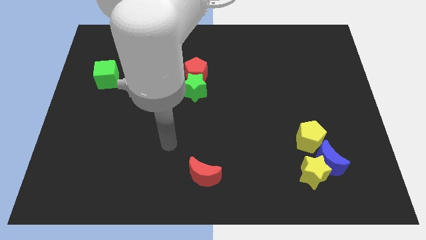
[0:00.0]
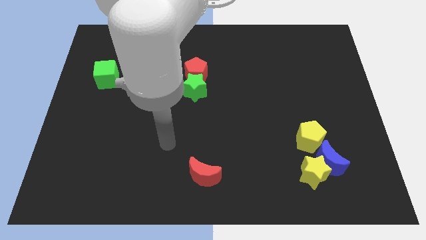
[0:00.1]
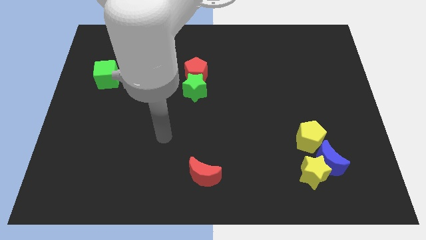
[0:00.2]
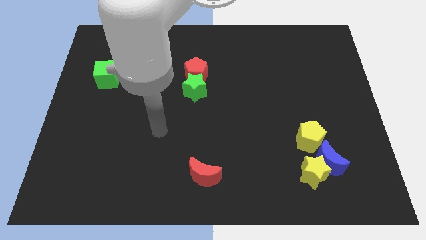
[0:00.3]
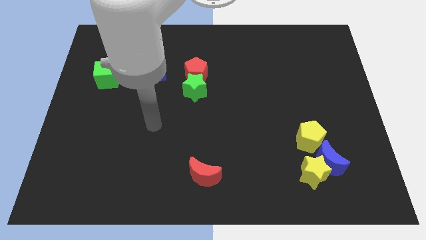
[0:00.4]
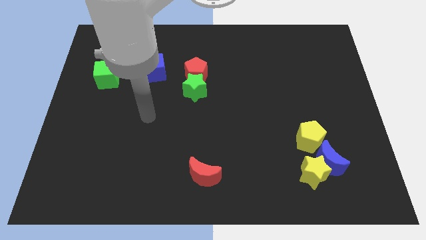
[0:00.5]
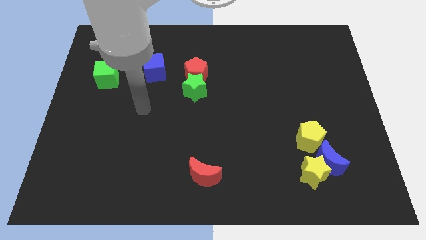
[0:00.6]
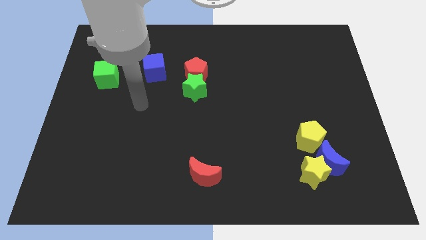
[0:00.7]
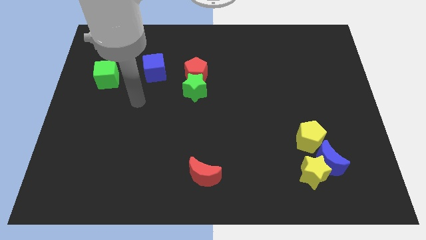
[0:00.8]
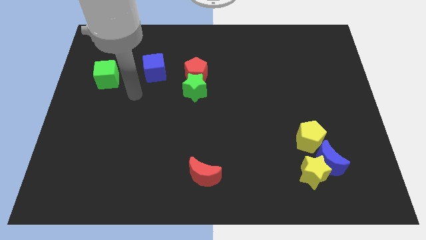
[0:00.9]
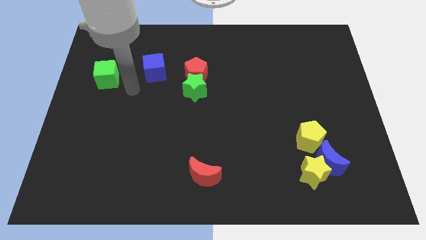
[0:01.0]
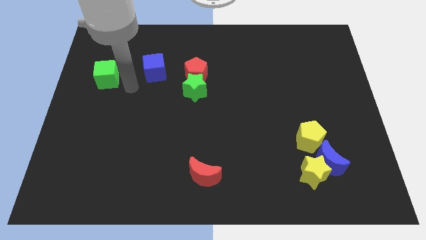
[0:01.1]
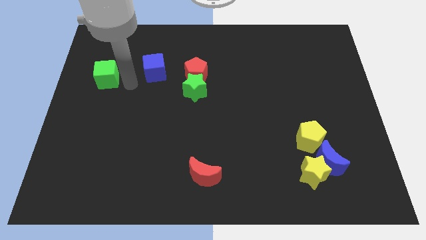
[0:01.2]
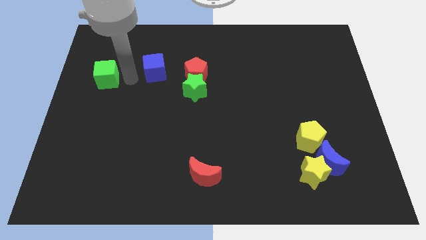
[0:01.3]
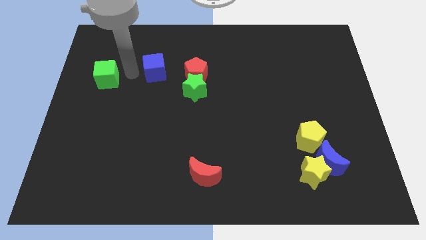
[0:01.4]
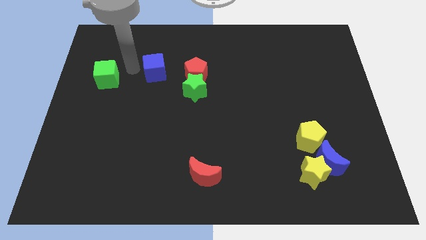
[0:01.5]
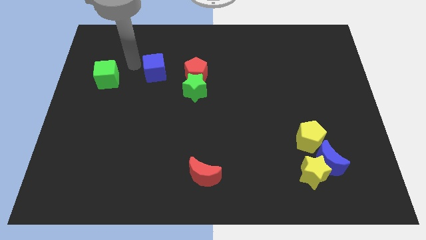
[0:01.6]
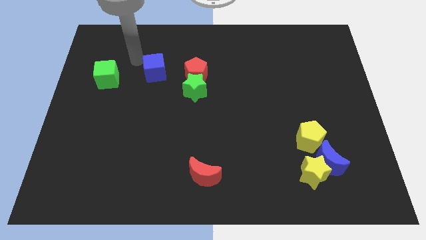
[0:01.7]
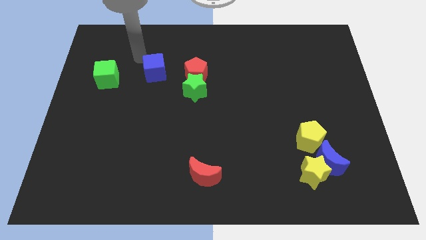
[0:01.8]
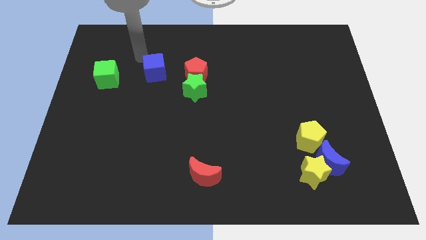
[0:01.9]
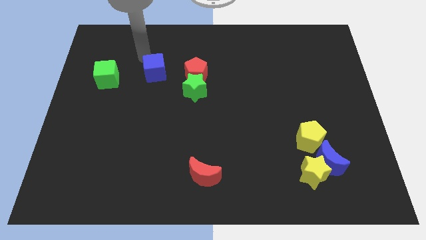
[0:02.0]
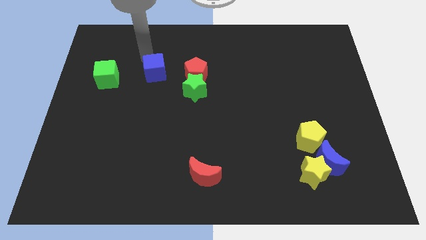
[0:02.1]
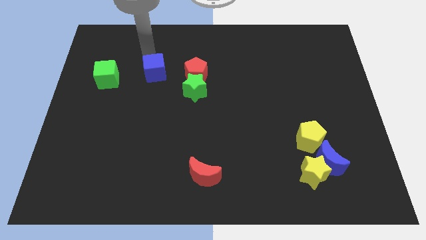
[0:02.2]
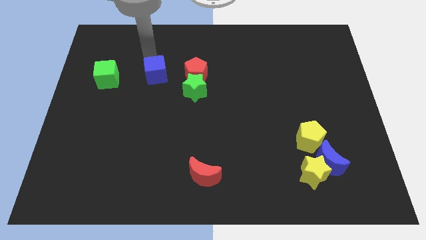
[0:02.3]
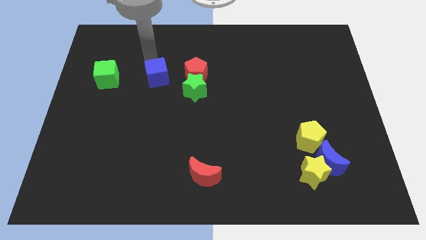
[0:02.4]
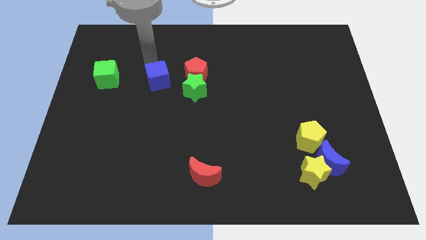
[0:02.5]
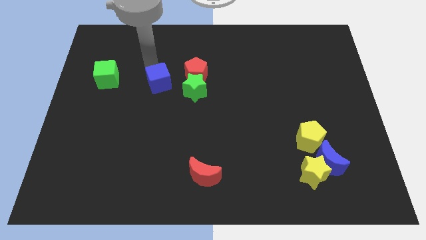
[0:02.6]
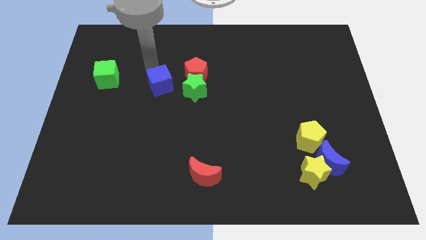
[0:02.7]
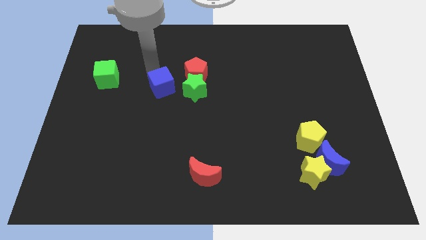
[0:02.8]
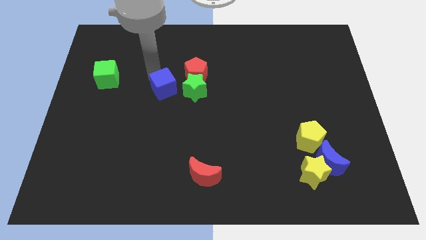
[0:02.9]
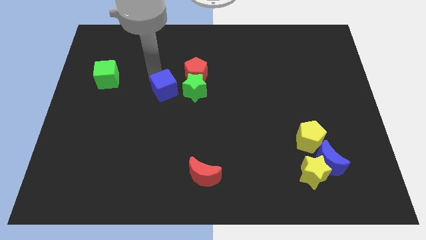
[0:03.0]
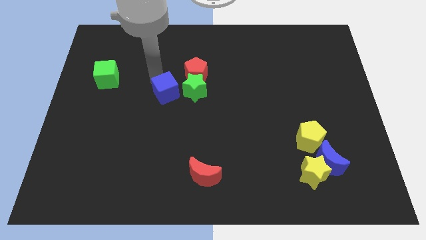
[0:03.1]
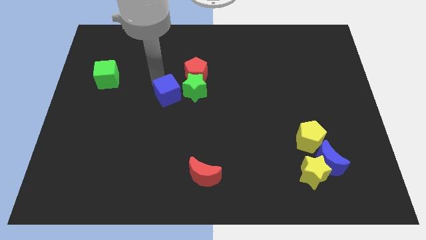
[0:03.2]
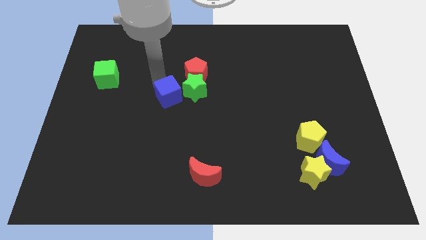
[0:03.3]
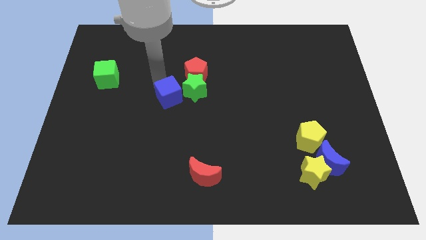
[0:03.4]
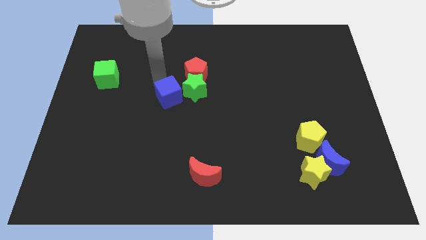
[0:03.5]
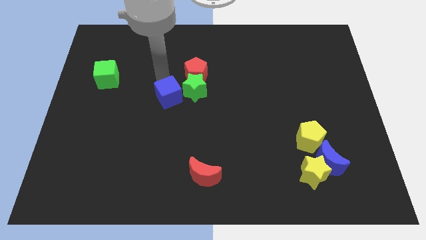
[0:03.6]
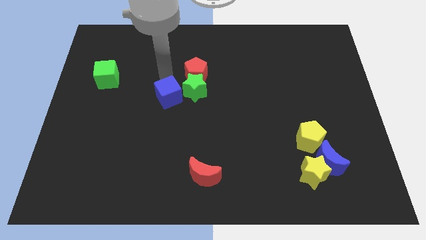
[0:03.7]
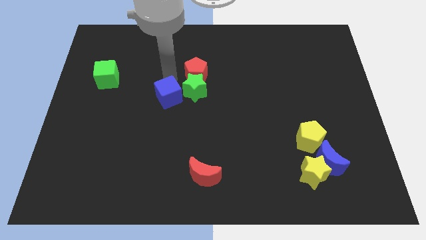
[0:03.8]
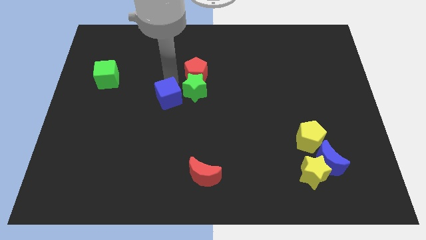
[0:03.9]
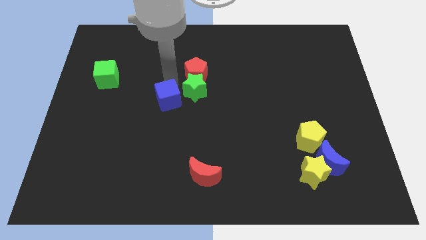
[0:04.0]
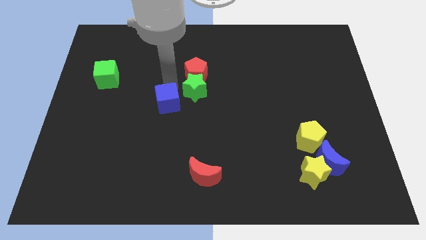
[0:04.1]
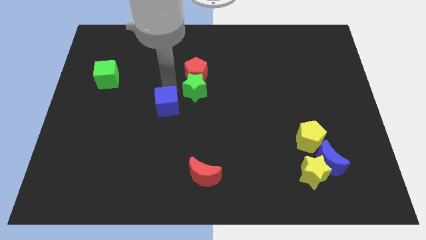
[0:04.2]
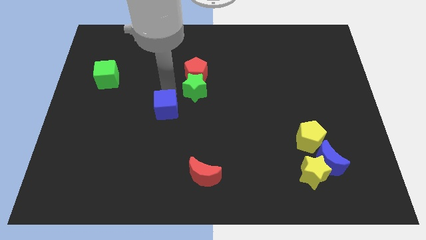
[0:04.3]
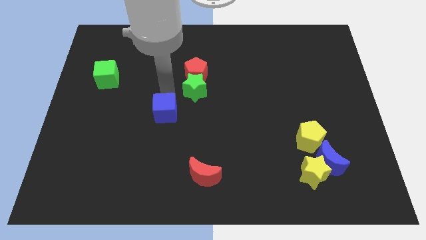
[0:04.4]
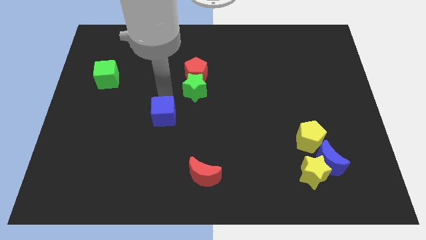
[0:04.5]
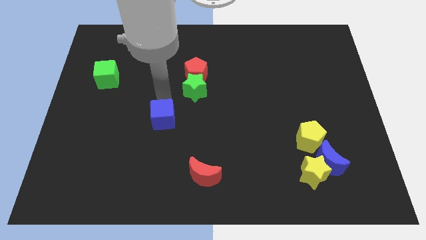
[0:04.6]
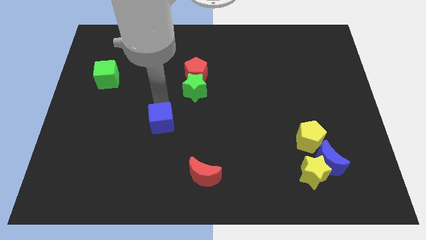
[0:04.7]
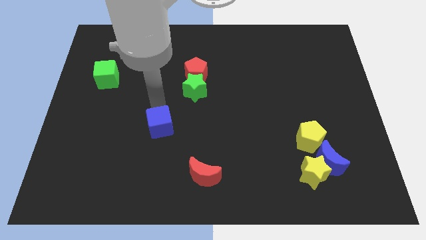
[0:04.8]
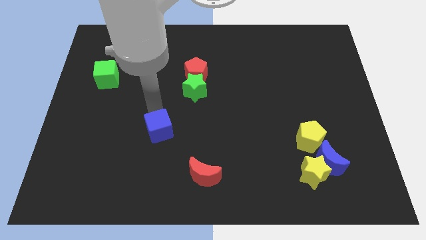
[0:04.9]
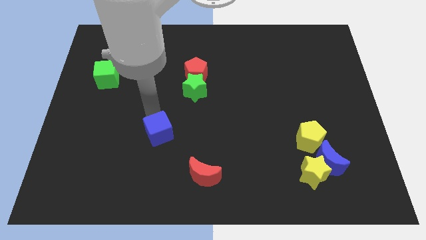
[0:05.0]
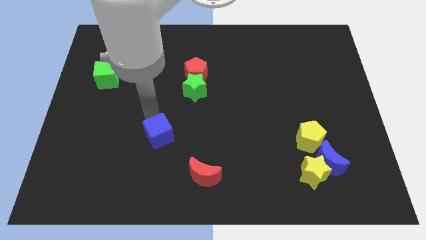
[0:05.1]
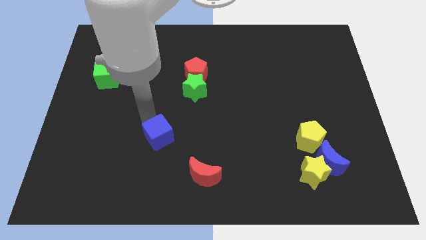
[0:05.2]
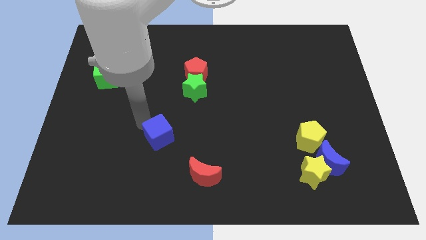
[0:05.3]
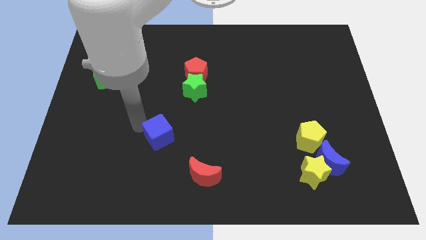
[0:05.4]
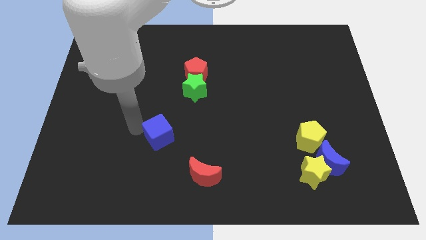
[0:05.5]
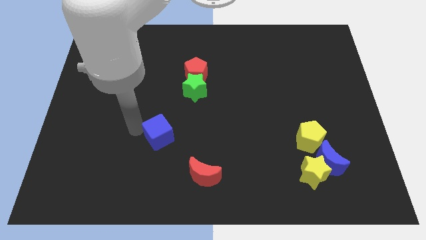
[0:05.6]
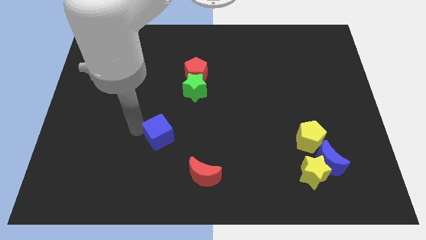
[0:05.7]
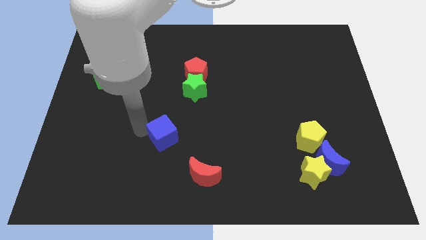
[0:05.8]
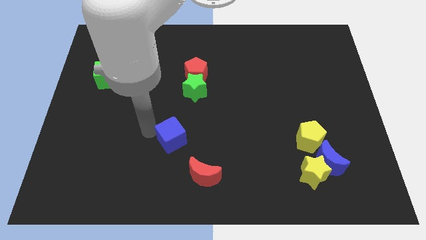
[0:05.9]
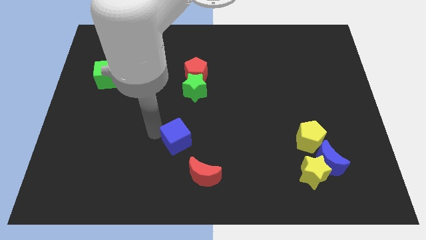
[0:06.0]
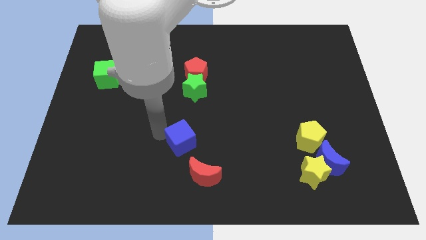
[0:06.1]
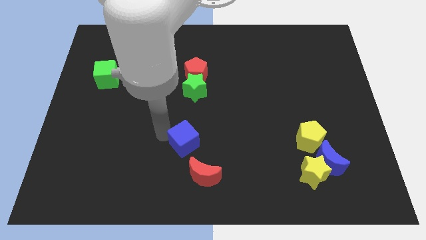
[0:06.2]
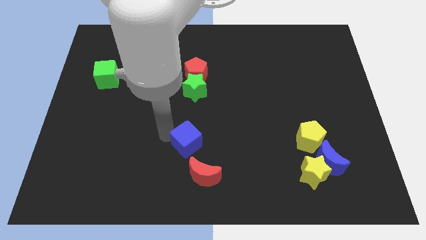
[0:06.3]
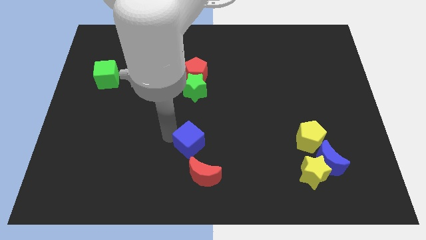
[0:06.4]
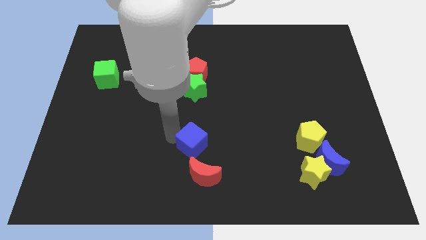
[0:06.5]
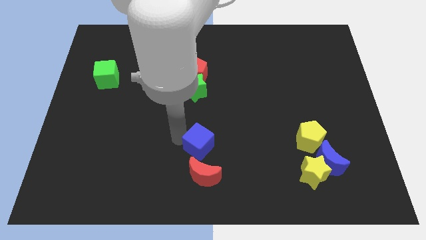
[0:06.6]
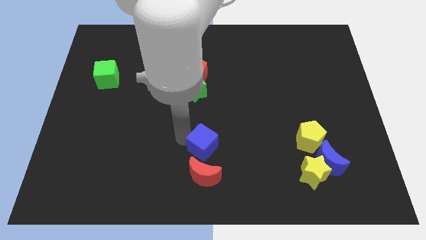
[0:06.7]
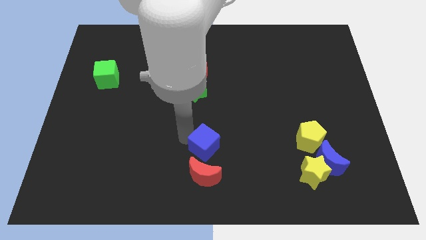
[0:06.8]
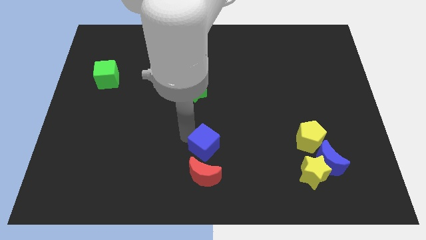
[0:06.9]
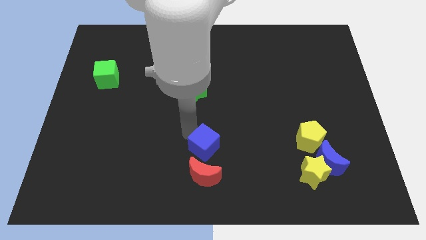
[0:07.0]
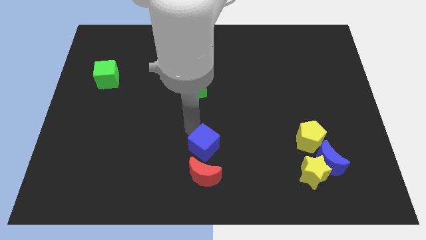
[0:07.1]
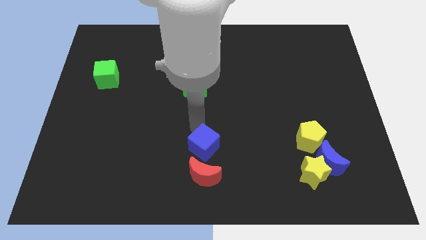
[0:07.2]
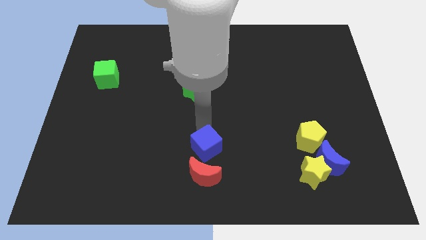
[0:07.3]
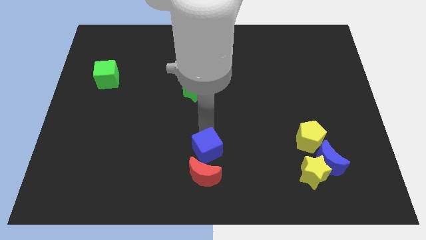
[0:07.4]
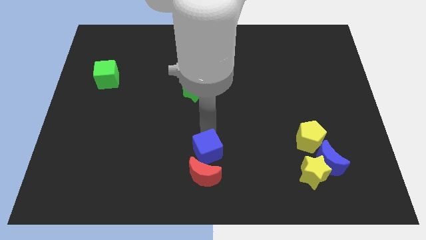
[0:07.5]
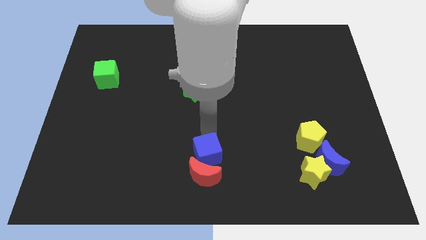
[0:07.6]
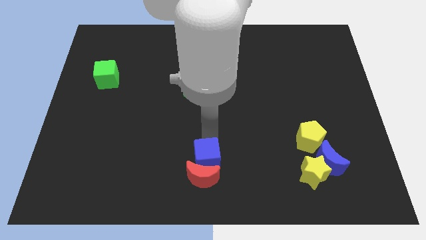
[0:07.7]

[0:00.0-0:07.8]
move the blue cube close to the red moon

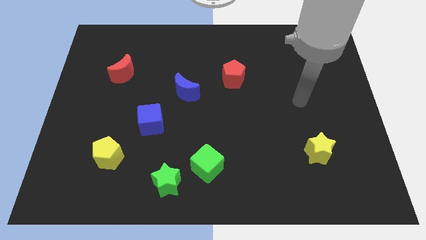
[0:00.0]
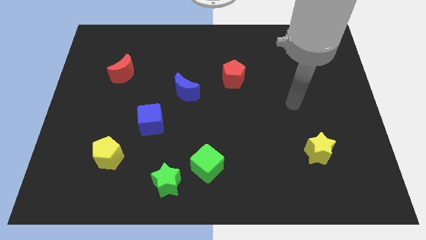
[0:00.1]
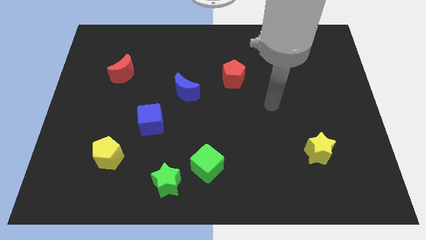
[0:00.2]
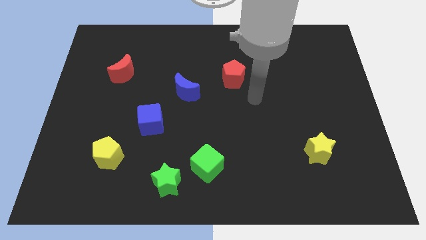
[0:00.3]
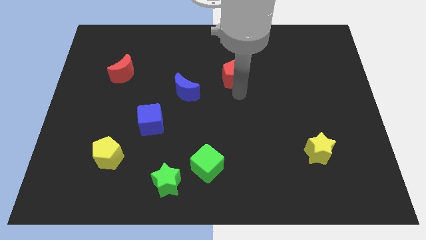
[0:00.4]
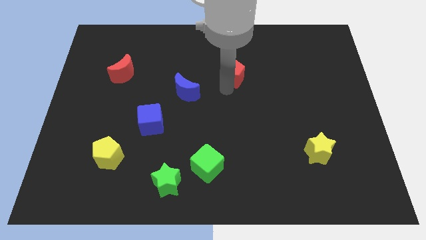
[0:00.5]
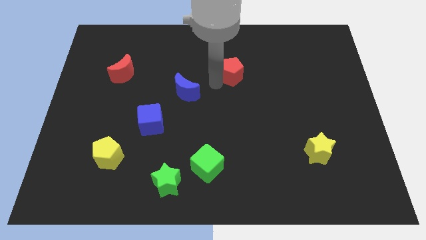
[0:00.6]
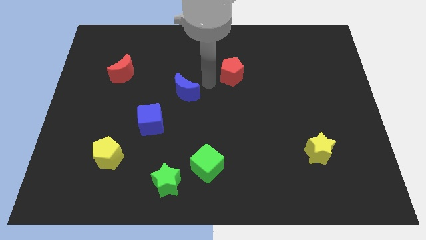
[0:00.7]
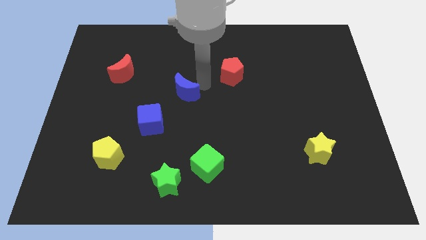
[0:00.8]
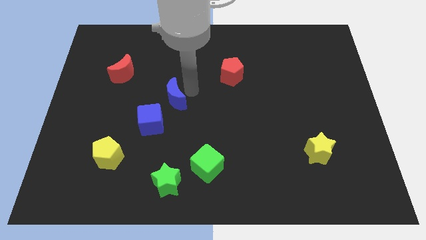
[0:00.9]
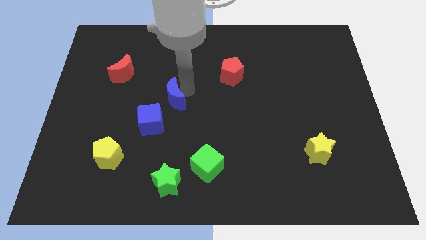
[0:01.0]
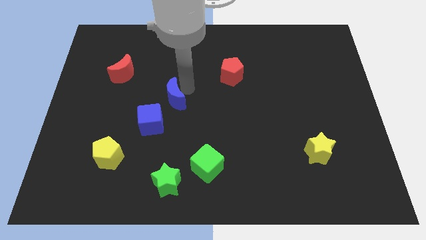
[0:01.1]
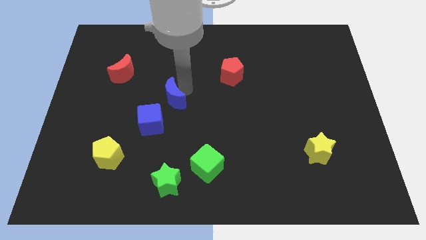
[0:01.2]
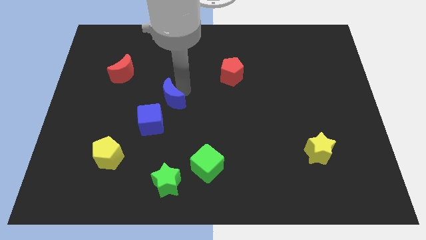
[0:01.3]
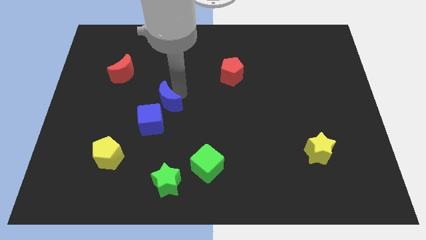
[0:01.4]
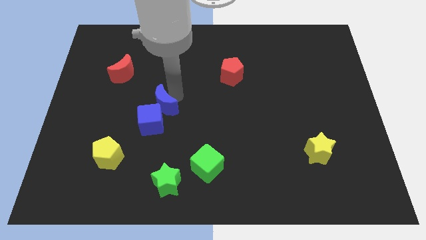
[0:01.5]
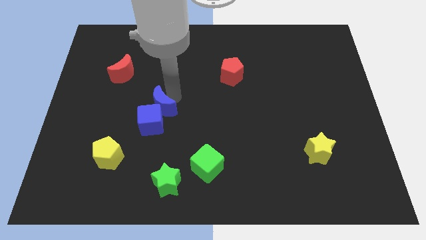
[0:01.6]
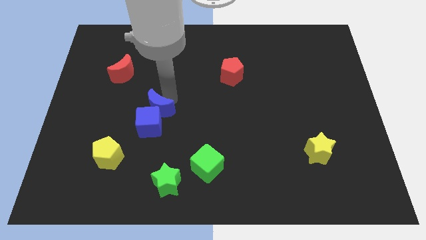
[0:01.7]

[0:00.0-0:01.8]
push the blue moon to the blue cube
